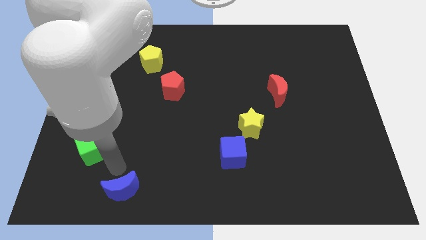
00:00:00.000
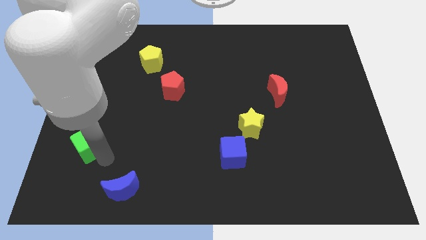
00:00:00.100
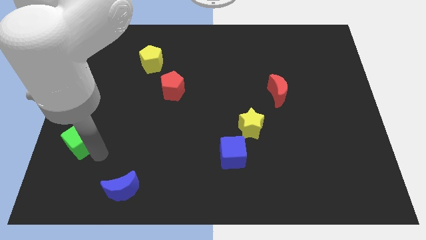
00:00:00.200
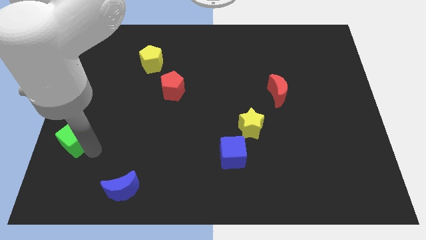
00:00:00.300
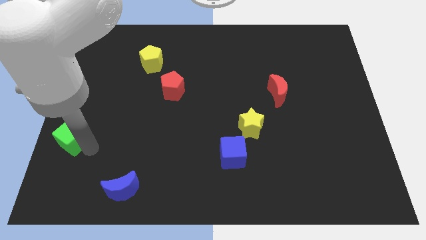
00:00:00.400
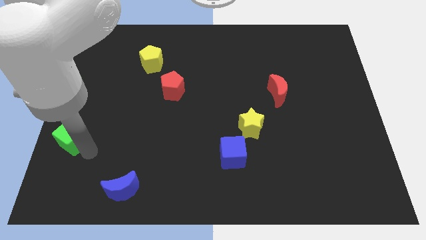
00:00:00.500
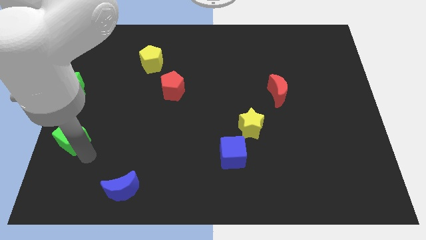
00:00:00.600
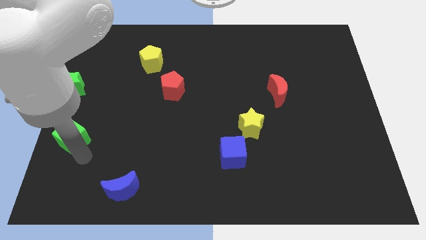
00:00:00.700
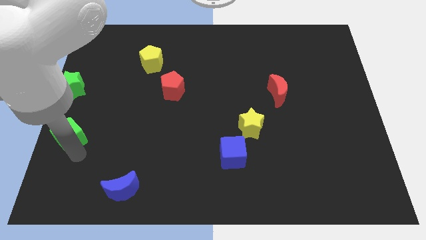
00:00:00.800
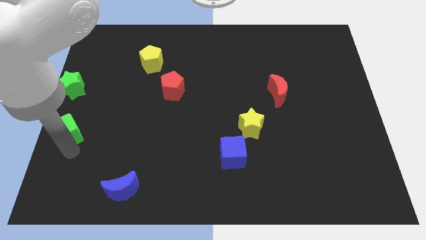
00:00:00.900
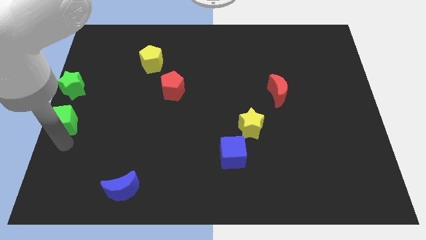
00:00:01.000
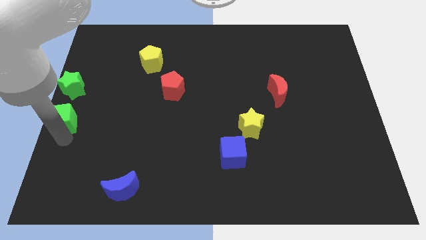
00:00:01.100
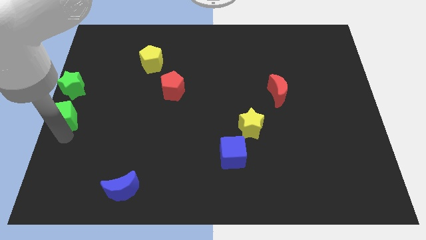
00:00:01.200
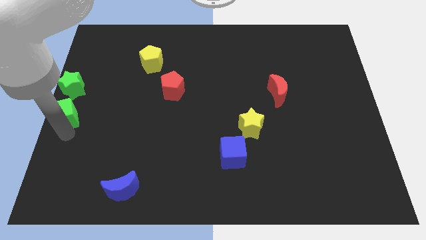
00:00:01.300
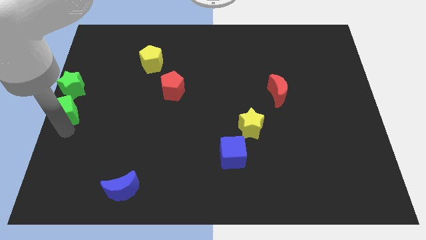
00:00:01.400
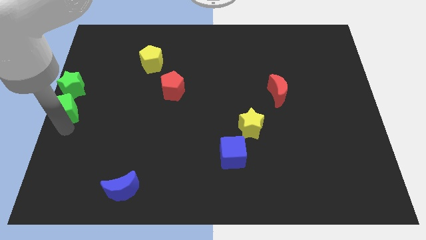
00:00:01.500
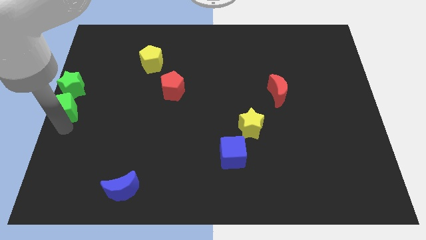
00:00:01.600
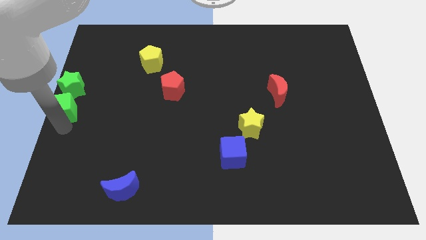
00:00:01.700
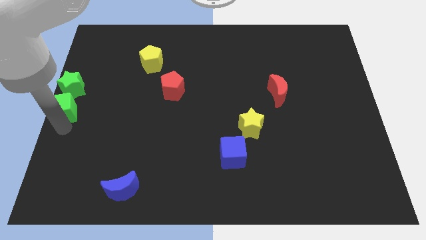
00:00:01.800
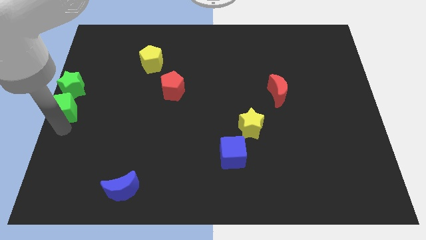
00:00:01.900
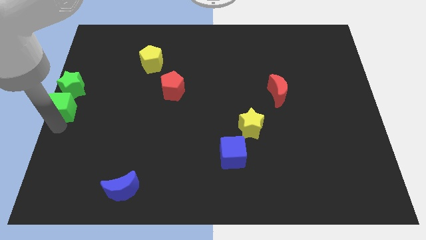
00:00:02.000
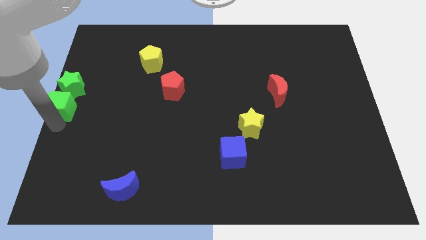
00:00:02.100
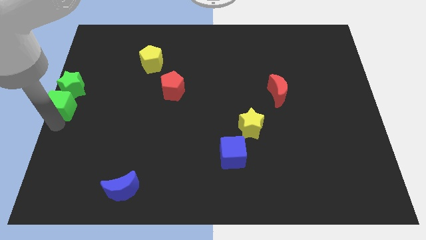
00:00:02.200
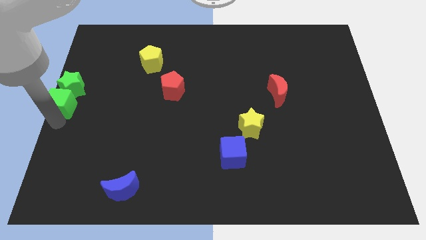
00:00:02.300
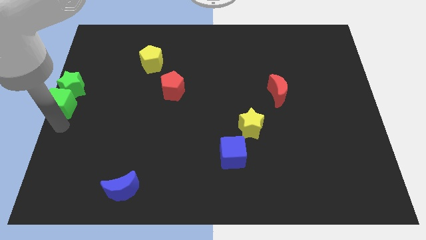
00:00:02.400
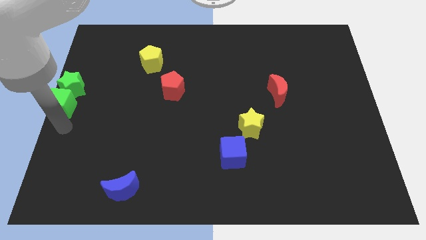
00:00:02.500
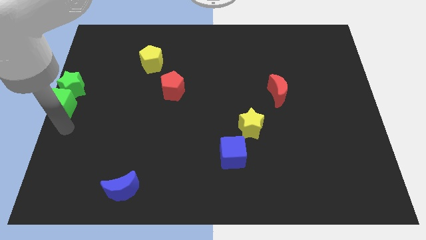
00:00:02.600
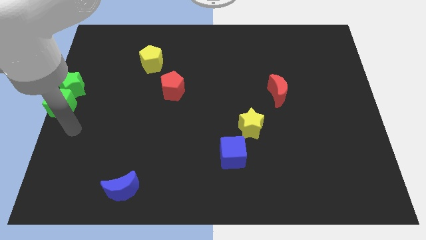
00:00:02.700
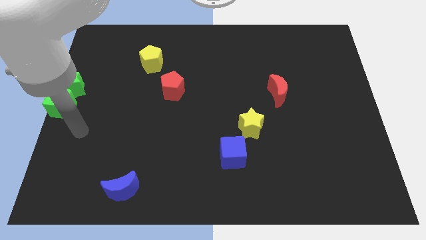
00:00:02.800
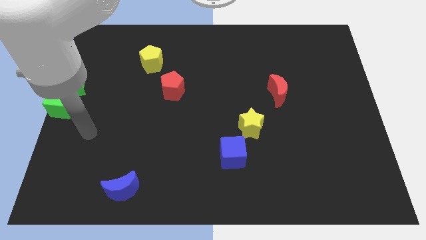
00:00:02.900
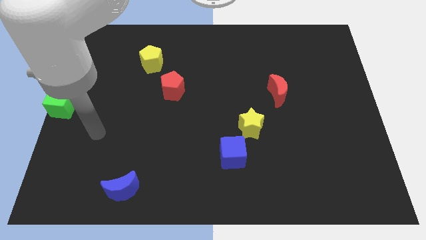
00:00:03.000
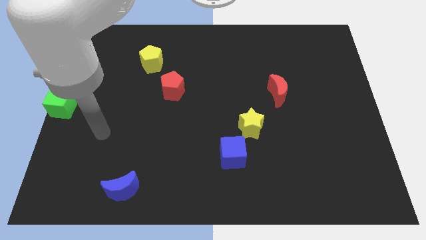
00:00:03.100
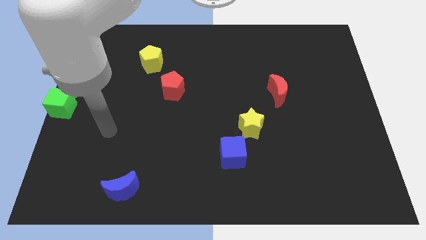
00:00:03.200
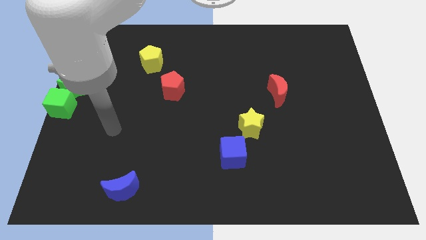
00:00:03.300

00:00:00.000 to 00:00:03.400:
move green cube into green star

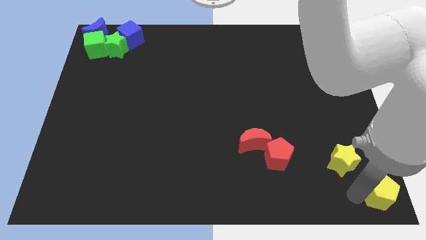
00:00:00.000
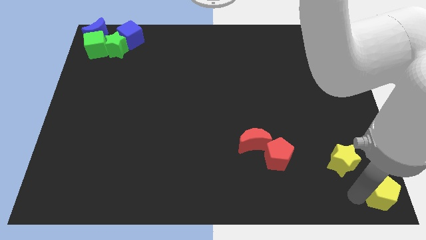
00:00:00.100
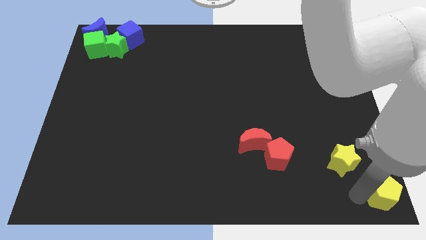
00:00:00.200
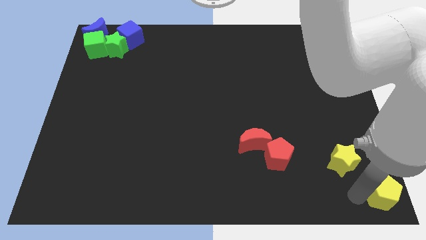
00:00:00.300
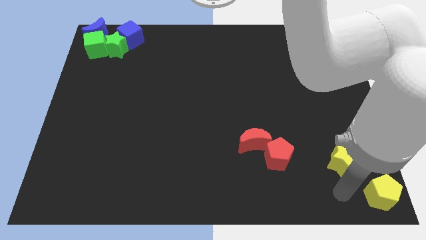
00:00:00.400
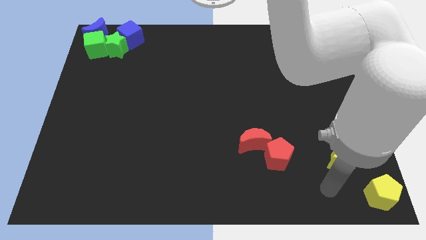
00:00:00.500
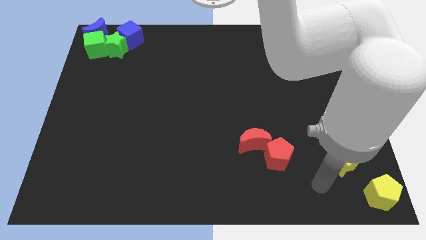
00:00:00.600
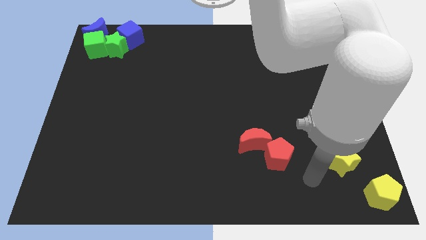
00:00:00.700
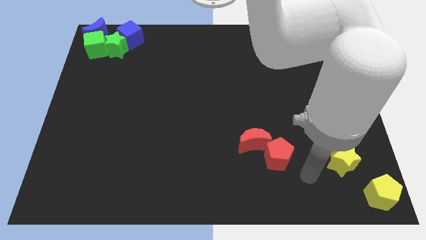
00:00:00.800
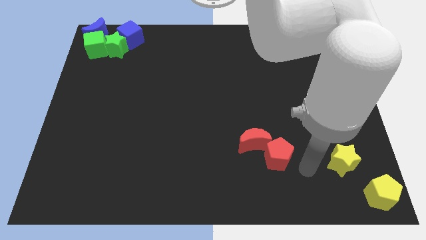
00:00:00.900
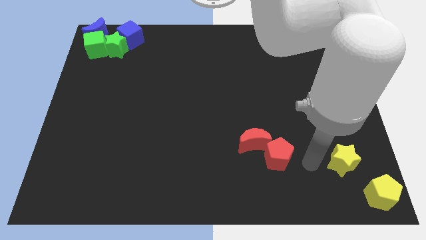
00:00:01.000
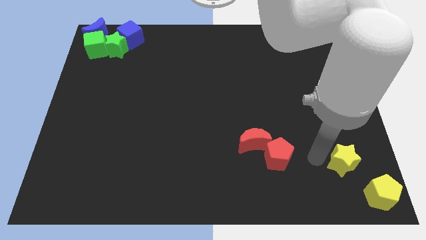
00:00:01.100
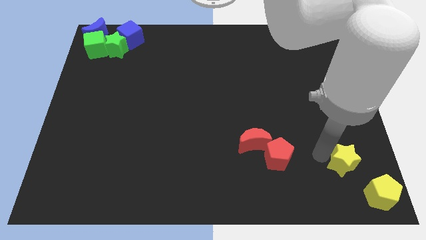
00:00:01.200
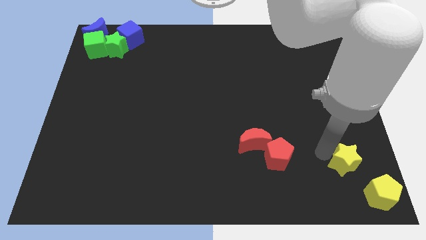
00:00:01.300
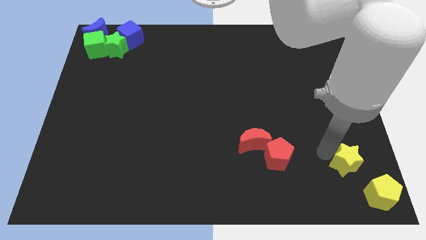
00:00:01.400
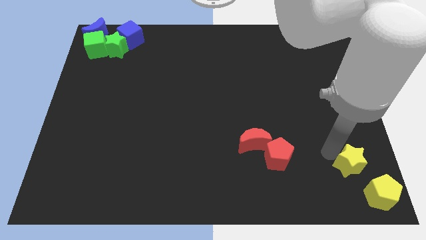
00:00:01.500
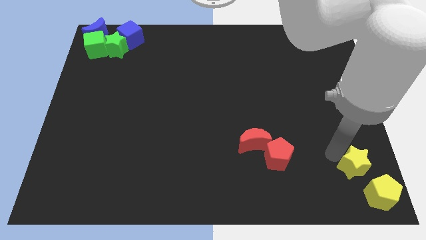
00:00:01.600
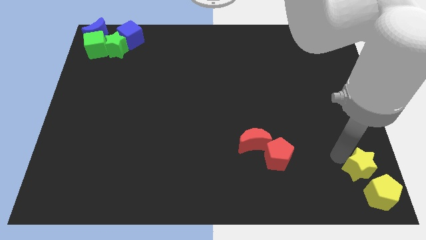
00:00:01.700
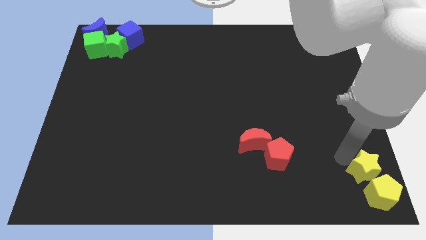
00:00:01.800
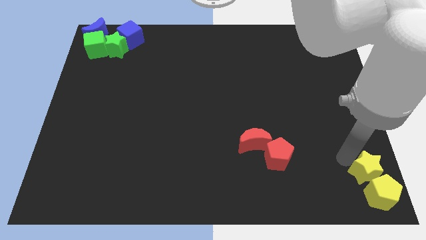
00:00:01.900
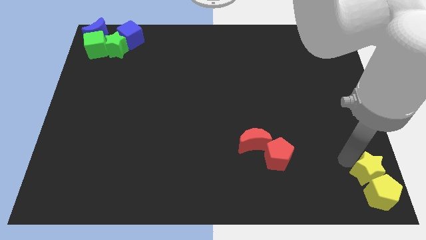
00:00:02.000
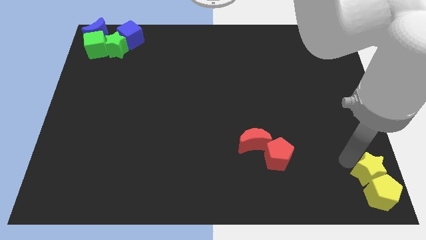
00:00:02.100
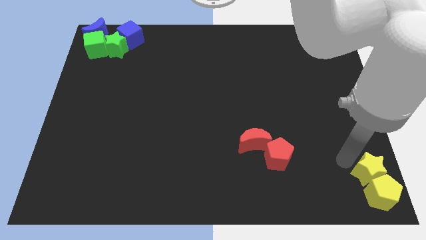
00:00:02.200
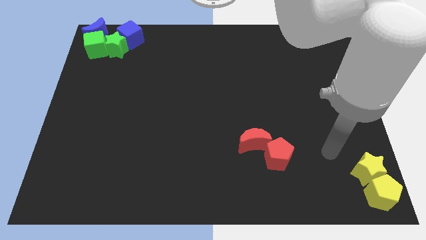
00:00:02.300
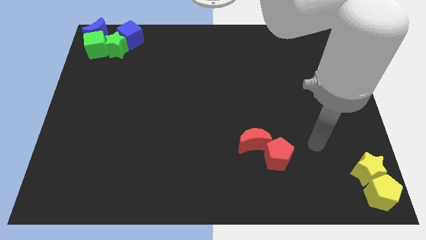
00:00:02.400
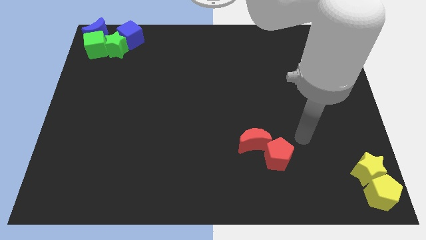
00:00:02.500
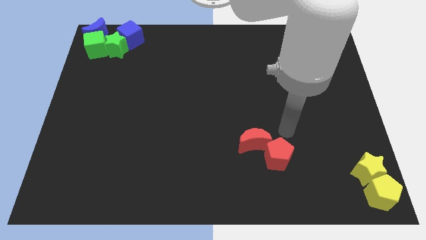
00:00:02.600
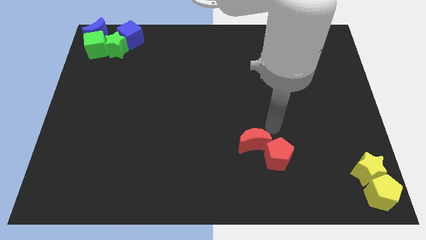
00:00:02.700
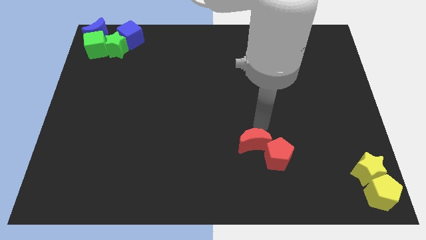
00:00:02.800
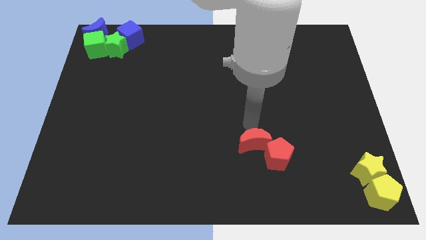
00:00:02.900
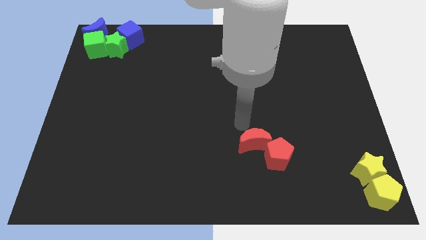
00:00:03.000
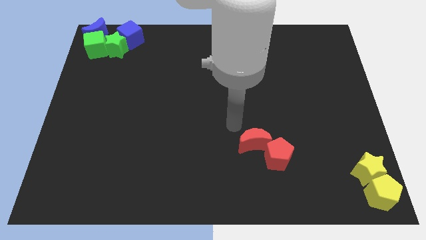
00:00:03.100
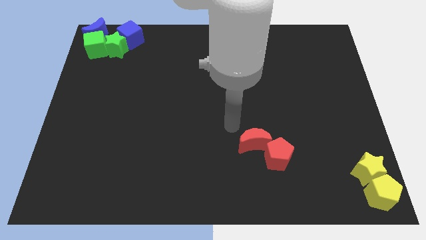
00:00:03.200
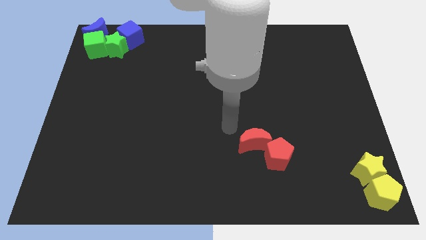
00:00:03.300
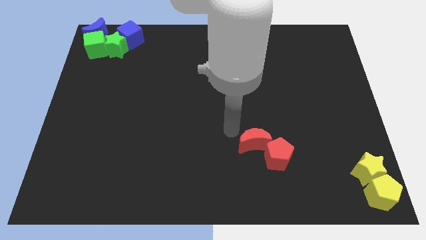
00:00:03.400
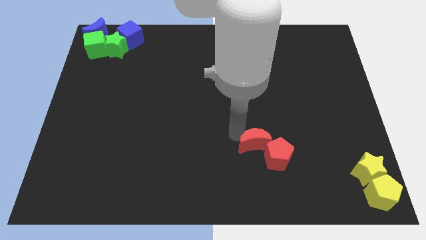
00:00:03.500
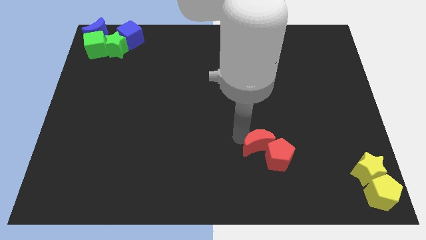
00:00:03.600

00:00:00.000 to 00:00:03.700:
move the yellow blocks to the bottom right of the board

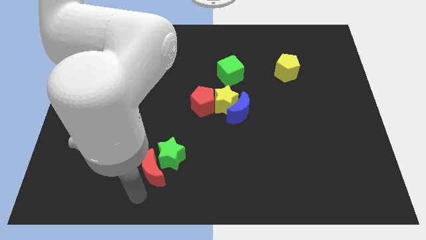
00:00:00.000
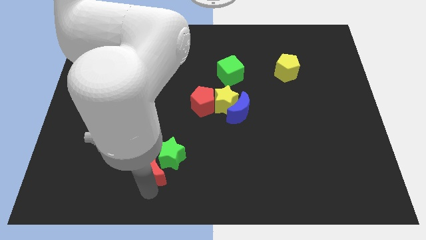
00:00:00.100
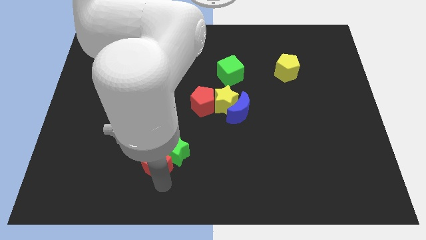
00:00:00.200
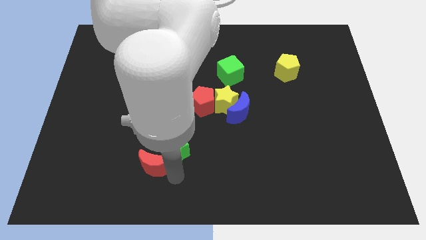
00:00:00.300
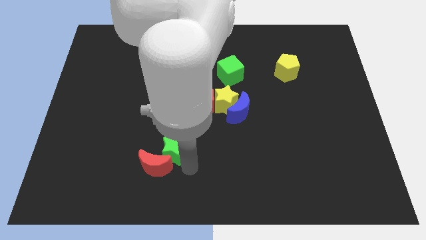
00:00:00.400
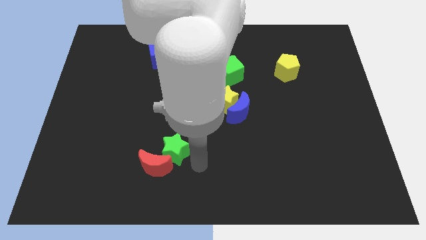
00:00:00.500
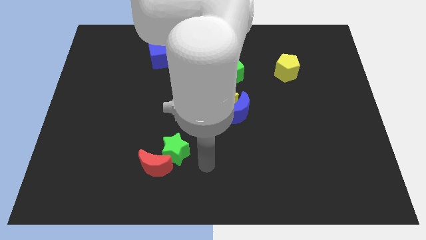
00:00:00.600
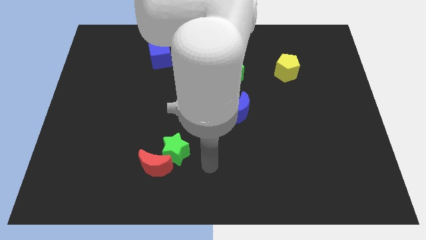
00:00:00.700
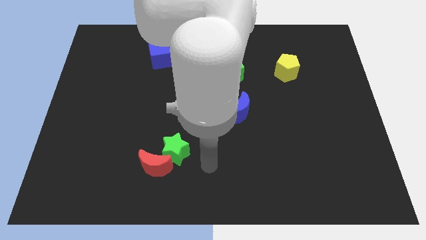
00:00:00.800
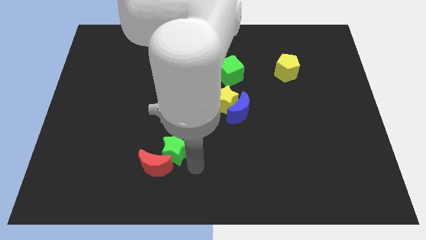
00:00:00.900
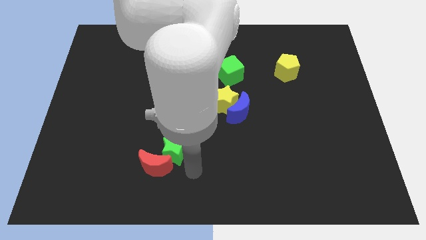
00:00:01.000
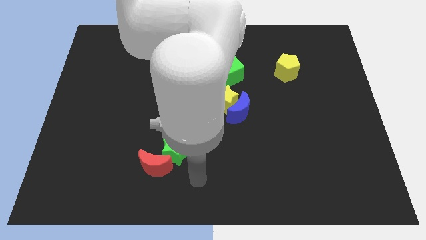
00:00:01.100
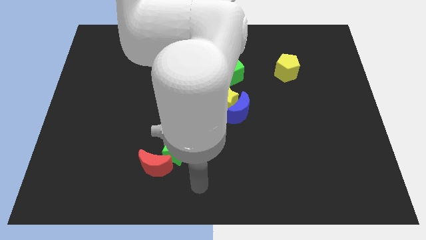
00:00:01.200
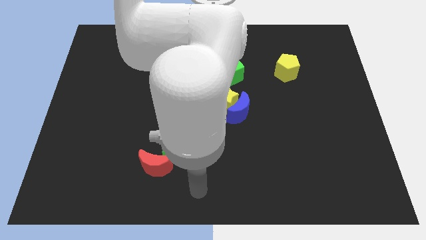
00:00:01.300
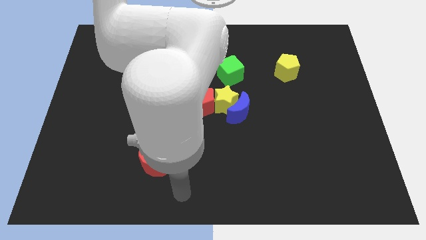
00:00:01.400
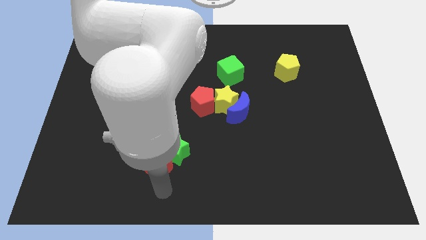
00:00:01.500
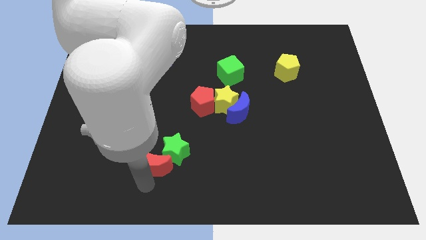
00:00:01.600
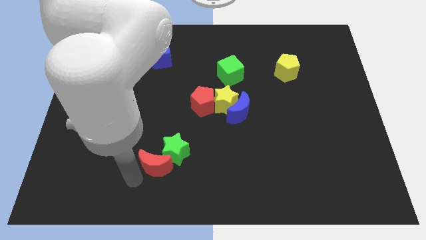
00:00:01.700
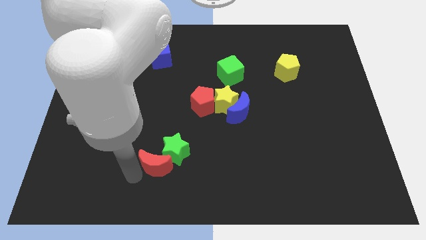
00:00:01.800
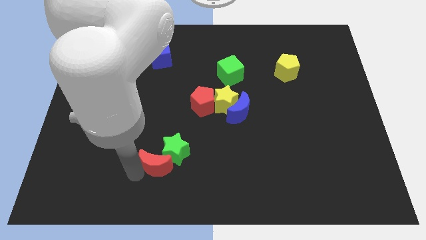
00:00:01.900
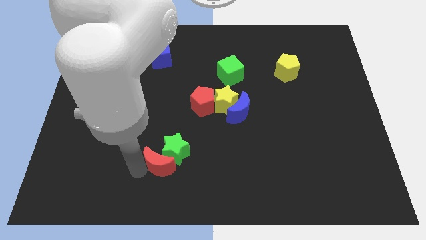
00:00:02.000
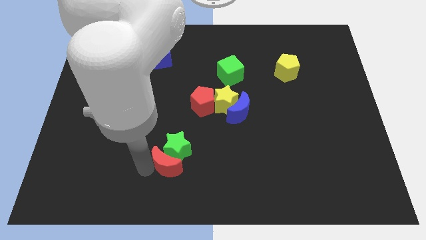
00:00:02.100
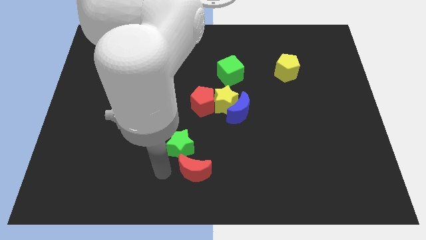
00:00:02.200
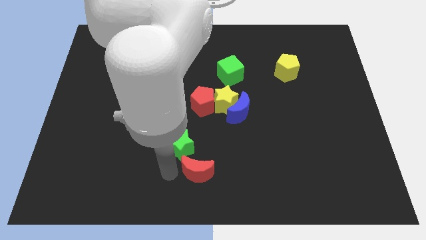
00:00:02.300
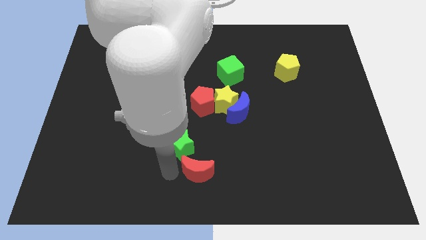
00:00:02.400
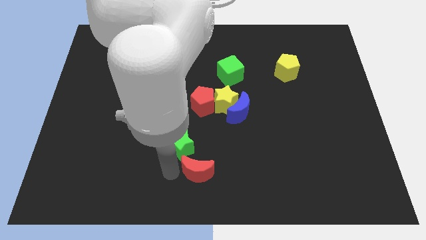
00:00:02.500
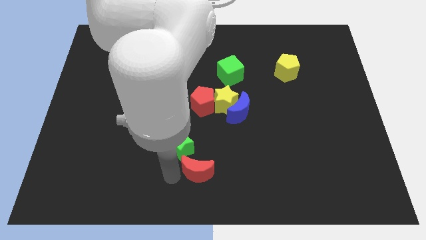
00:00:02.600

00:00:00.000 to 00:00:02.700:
move the red moon slightly right
